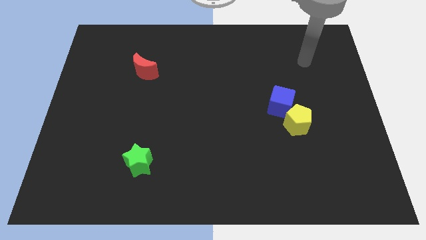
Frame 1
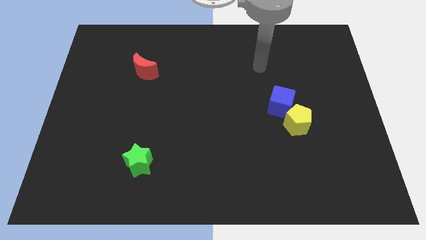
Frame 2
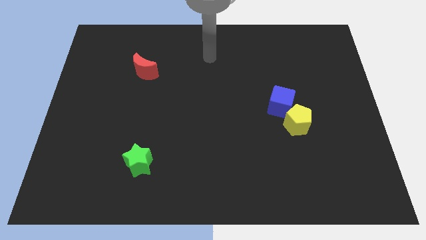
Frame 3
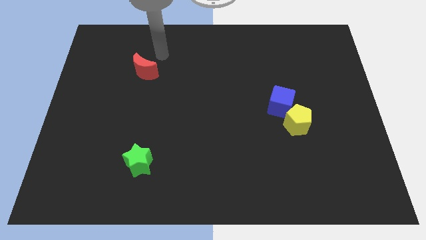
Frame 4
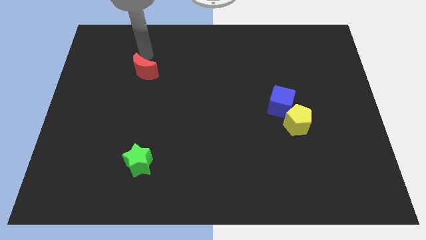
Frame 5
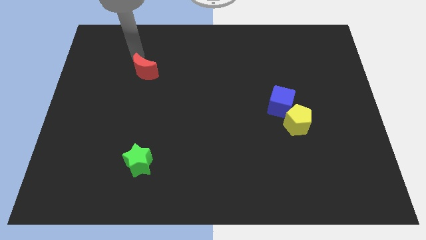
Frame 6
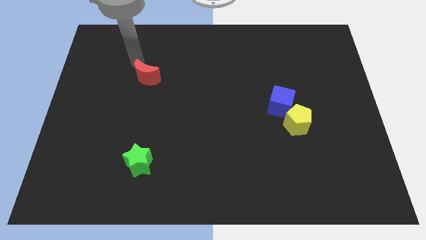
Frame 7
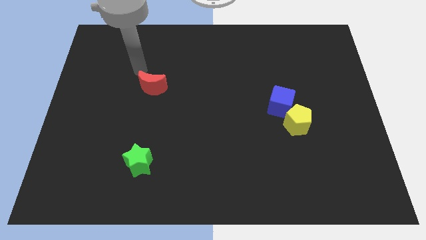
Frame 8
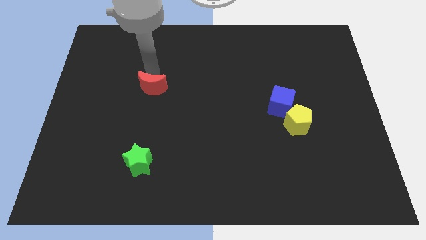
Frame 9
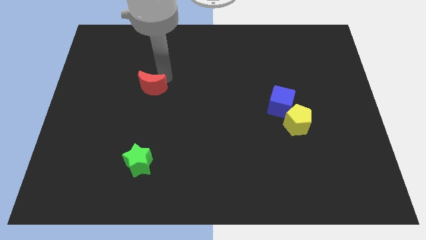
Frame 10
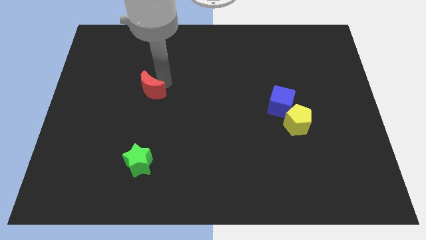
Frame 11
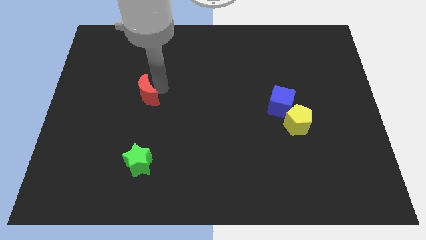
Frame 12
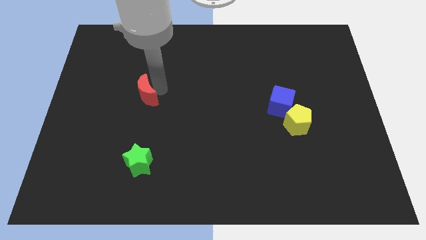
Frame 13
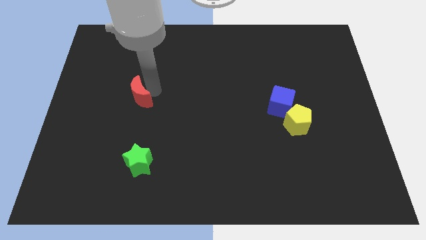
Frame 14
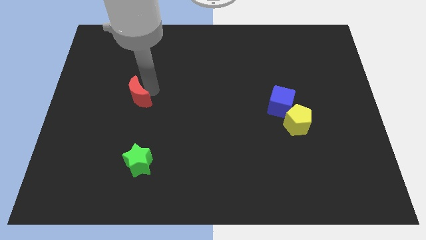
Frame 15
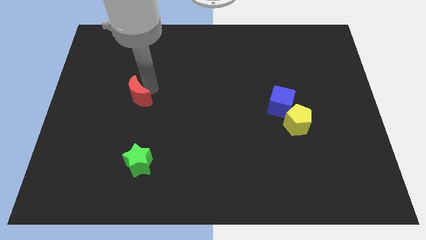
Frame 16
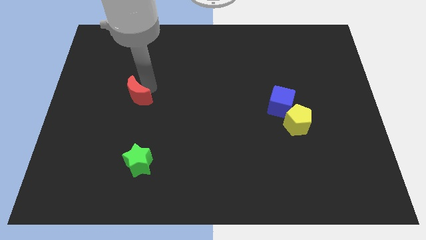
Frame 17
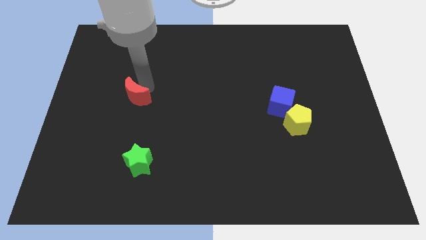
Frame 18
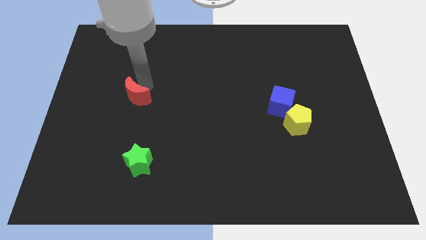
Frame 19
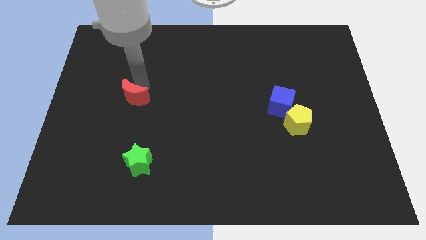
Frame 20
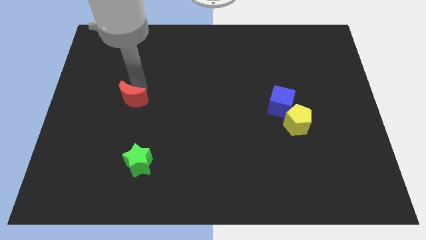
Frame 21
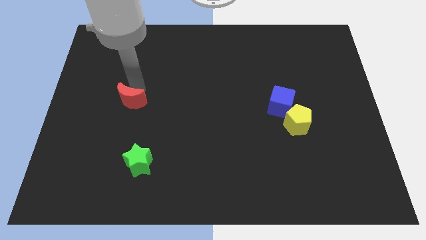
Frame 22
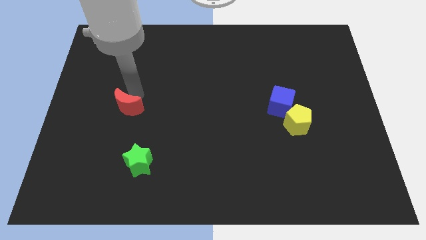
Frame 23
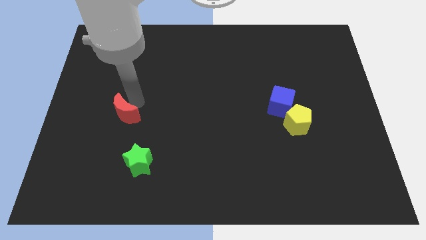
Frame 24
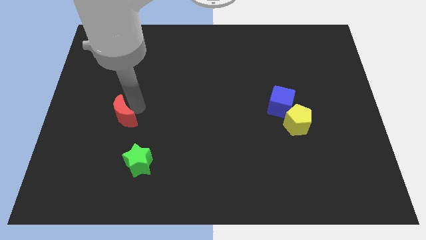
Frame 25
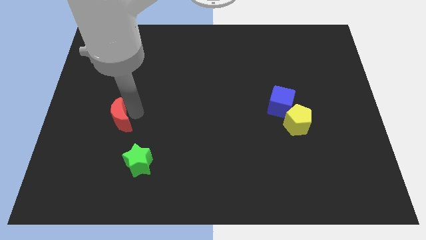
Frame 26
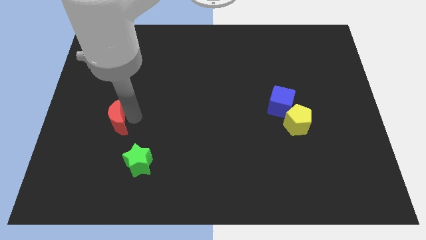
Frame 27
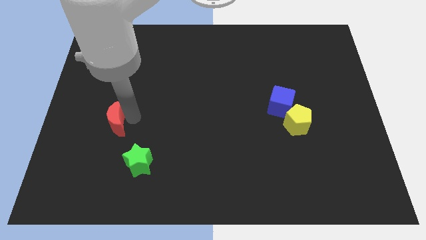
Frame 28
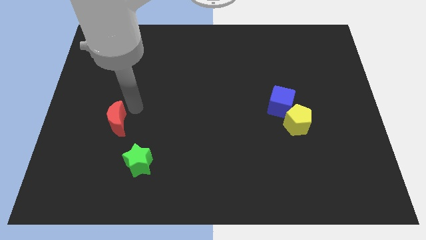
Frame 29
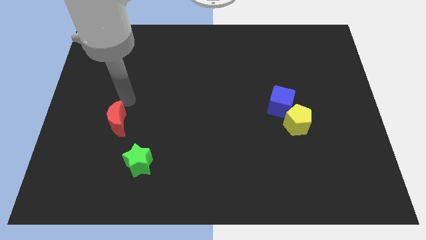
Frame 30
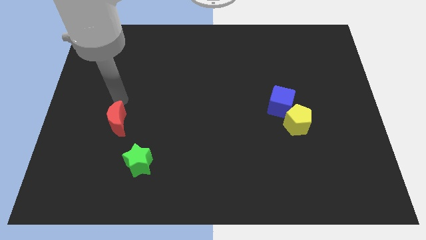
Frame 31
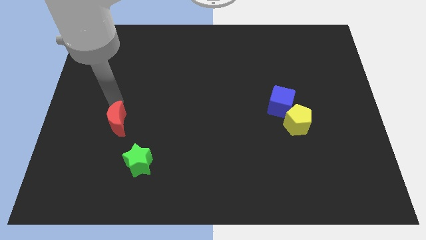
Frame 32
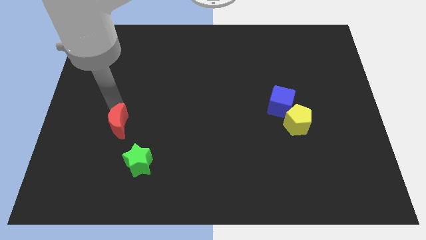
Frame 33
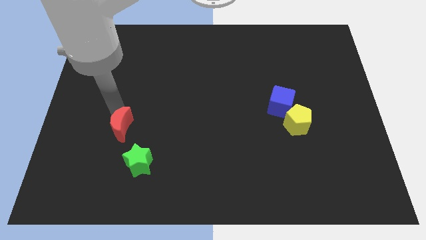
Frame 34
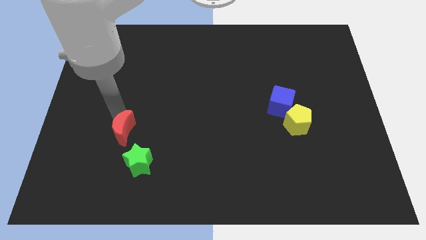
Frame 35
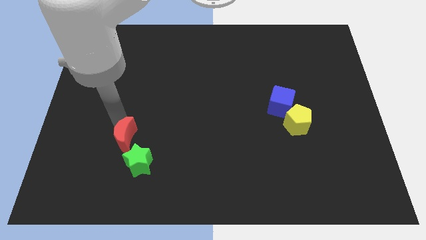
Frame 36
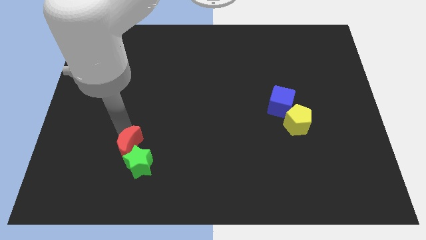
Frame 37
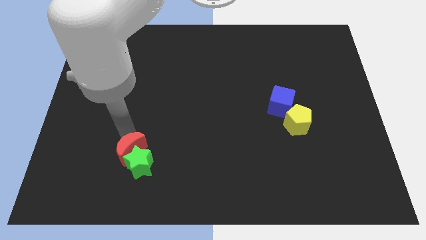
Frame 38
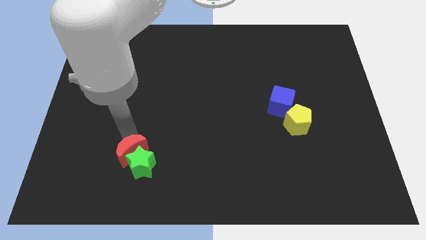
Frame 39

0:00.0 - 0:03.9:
put the moon to the star

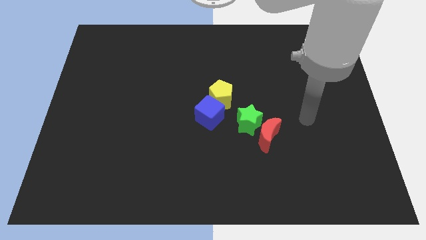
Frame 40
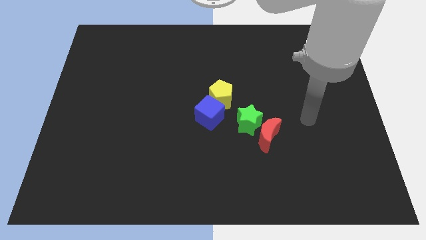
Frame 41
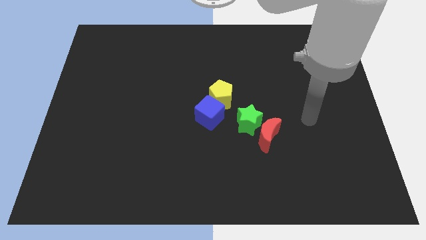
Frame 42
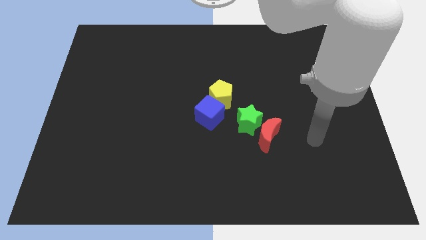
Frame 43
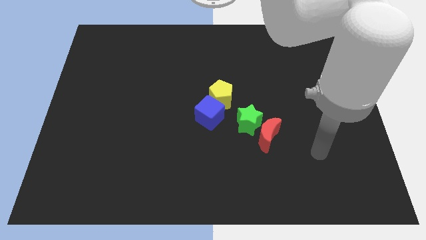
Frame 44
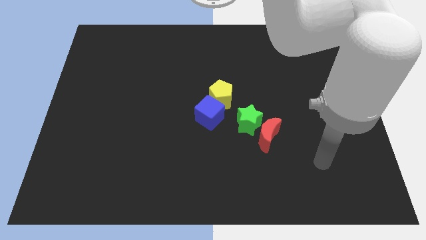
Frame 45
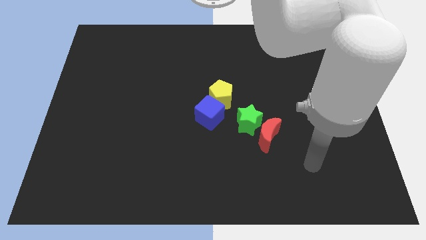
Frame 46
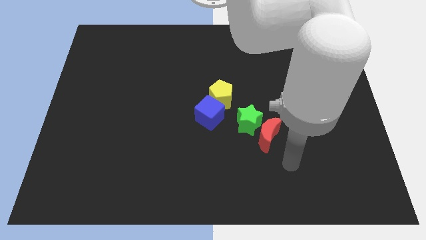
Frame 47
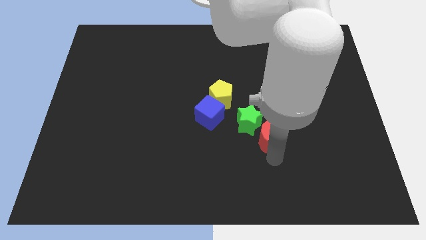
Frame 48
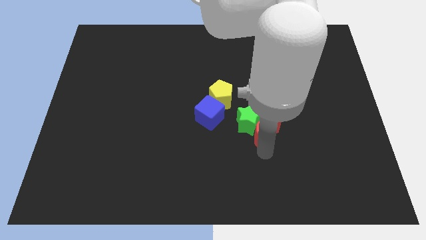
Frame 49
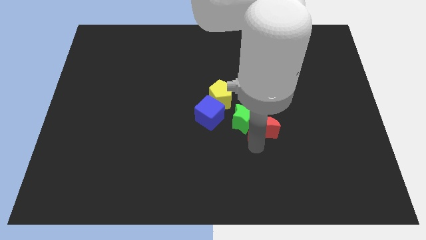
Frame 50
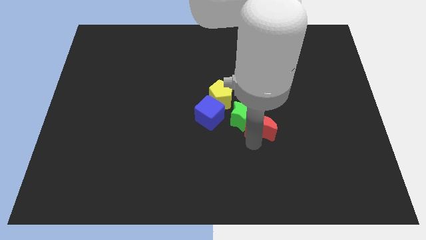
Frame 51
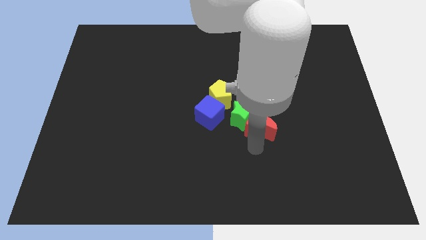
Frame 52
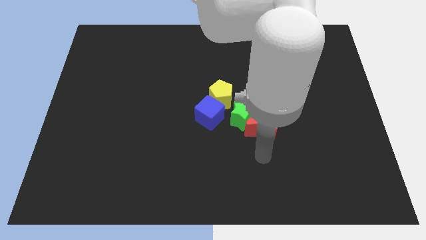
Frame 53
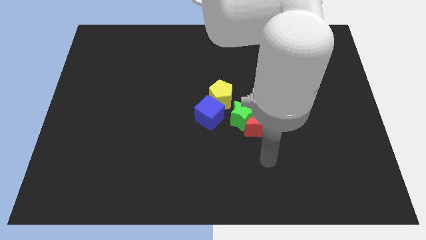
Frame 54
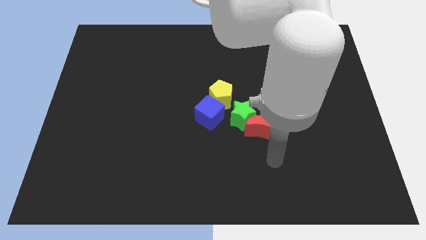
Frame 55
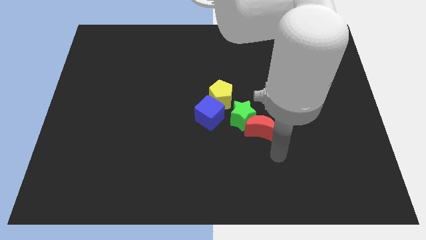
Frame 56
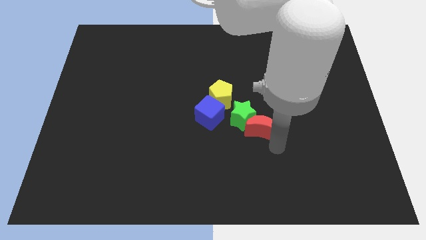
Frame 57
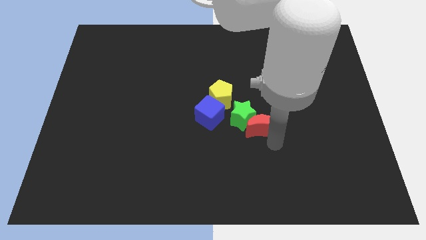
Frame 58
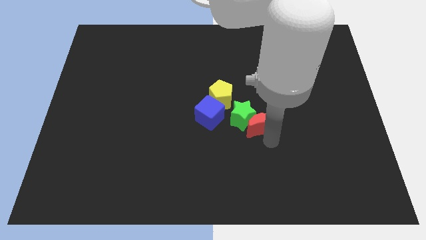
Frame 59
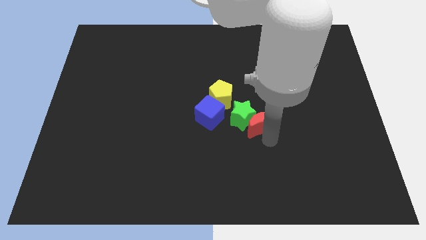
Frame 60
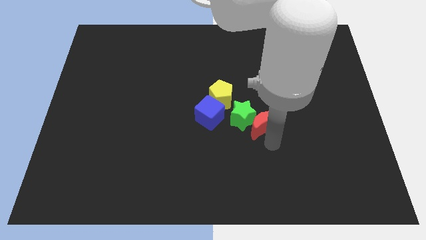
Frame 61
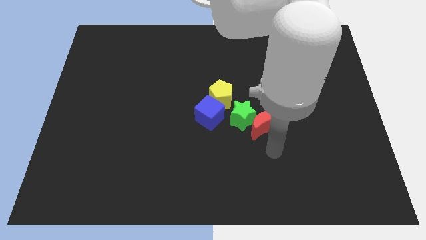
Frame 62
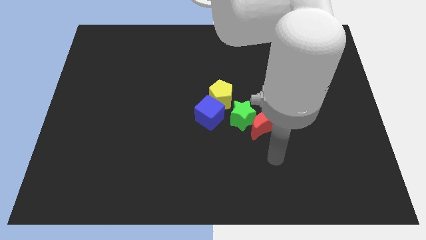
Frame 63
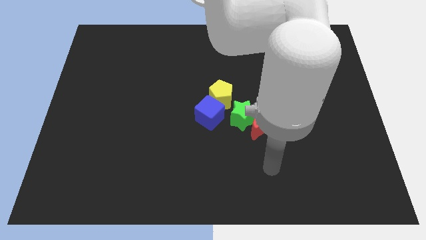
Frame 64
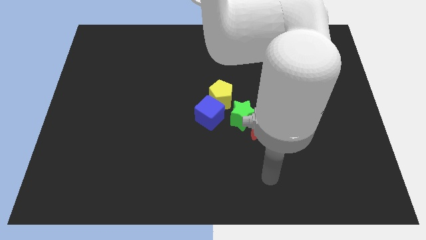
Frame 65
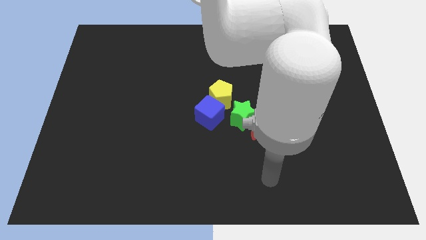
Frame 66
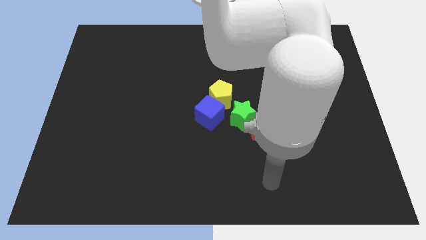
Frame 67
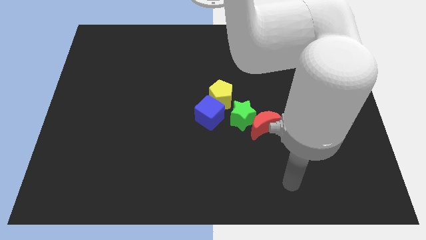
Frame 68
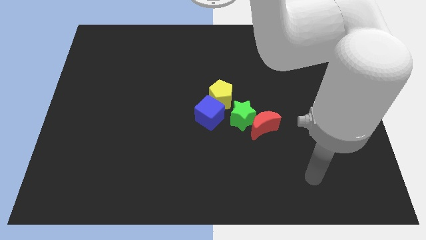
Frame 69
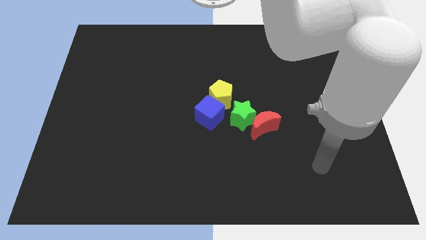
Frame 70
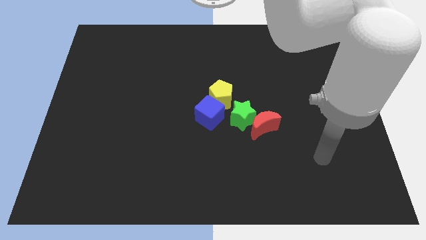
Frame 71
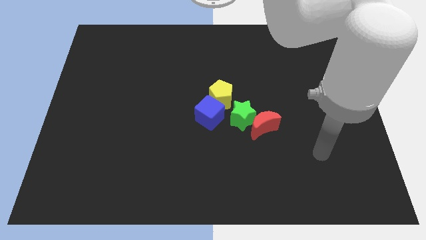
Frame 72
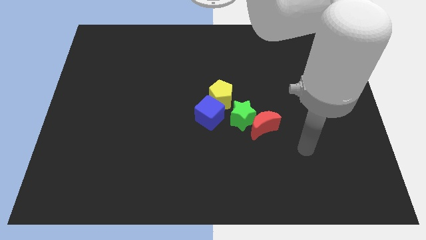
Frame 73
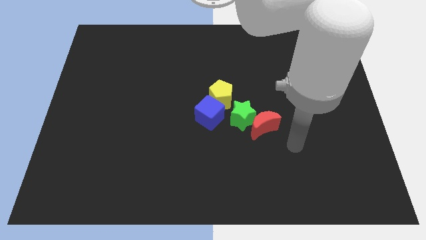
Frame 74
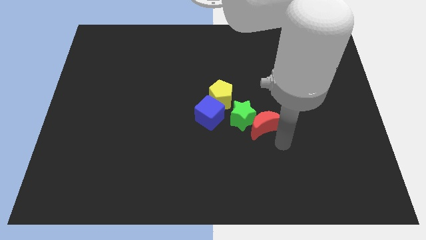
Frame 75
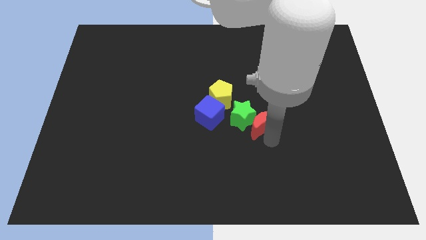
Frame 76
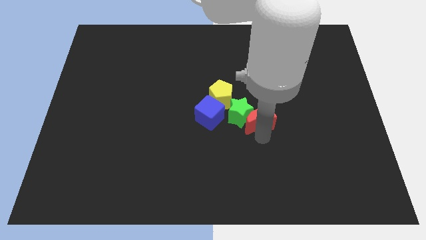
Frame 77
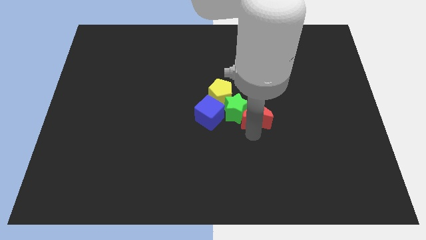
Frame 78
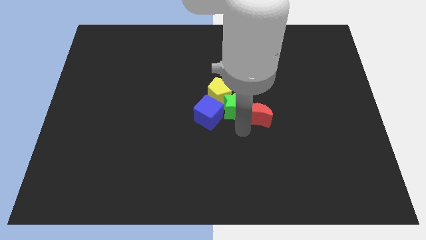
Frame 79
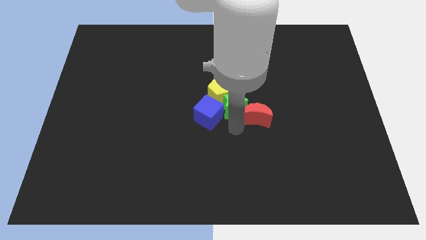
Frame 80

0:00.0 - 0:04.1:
slide the pentagon next to the green star

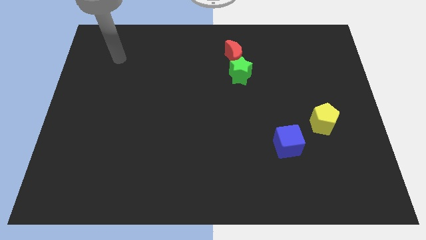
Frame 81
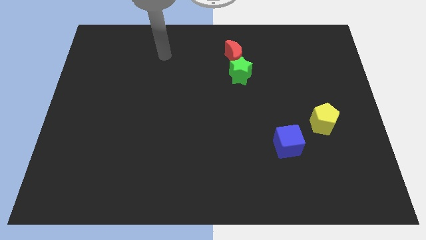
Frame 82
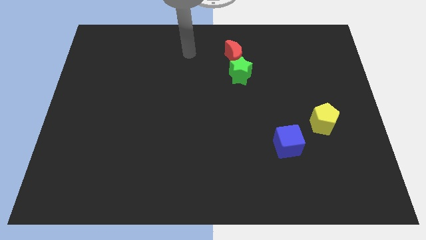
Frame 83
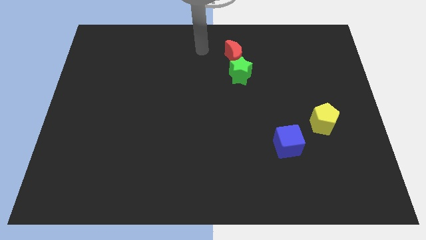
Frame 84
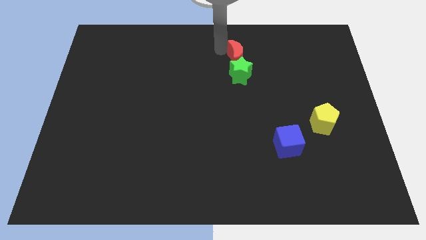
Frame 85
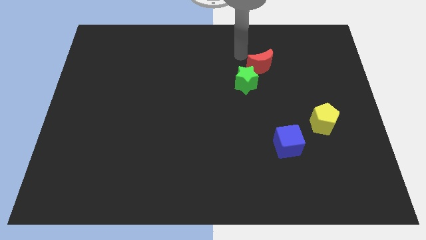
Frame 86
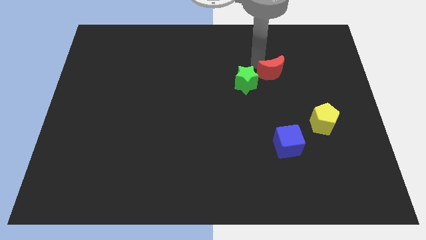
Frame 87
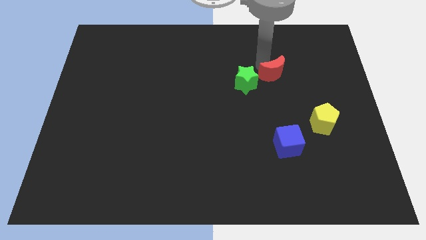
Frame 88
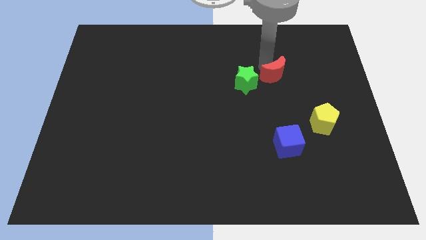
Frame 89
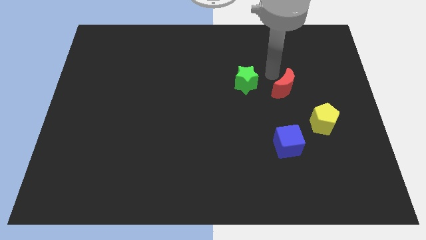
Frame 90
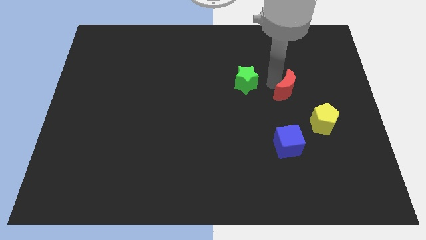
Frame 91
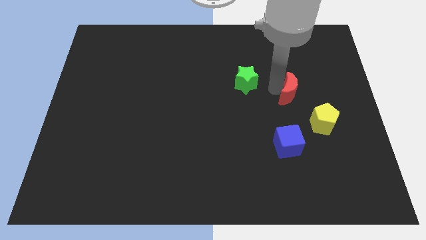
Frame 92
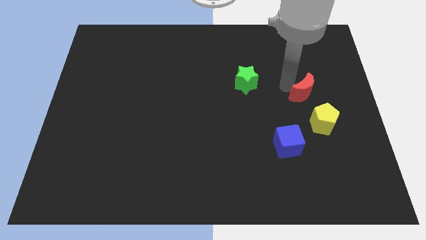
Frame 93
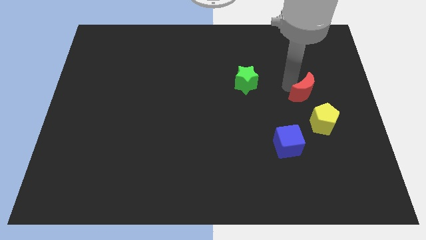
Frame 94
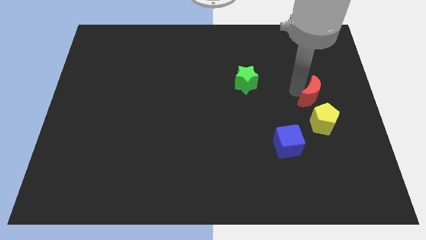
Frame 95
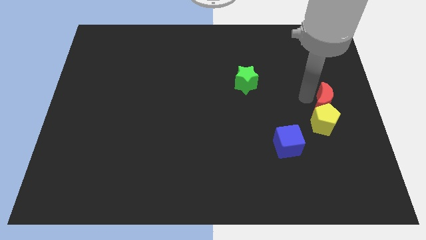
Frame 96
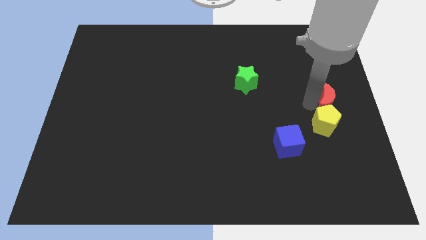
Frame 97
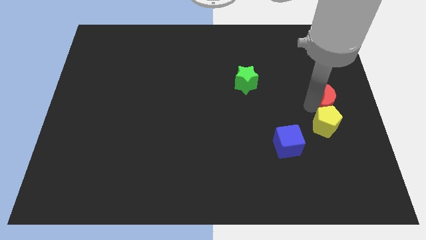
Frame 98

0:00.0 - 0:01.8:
move the red moon towards the pentagon
